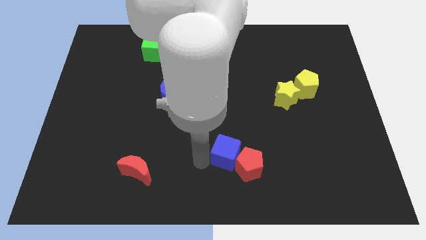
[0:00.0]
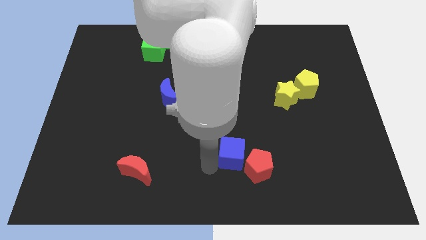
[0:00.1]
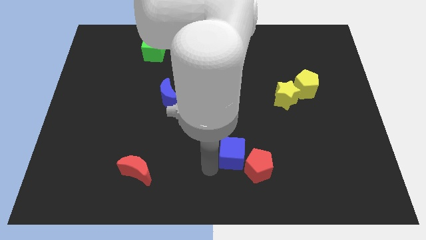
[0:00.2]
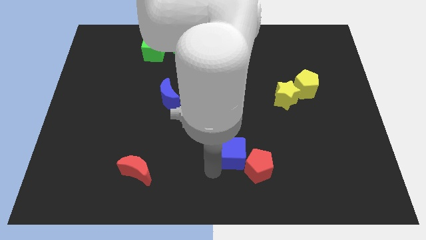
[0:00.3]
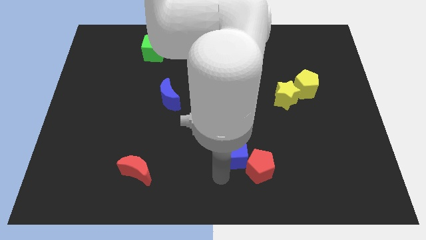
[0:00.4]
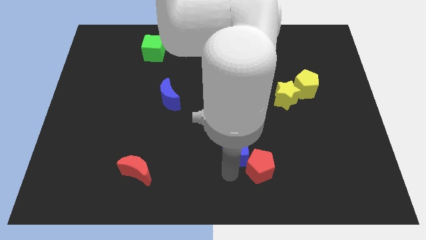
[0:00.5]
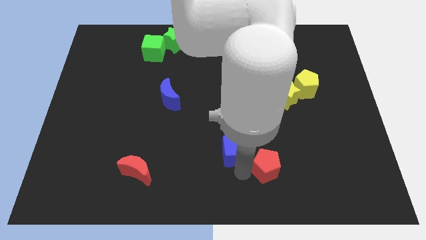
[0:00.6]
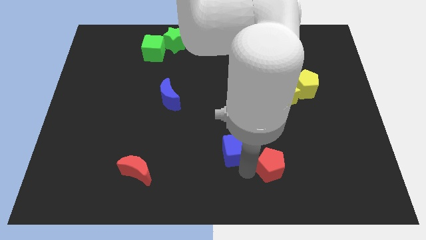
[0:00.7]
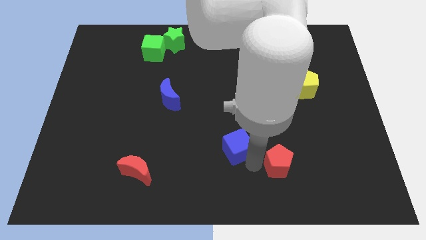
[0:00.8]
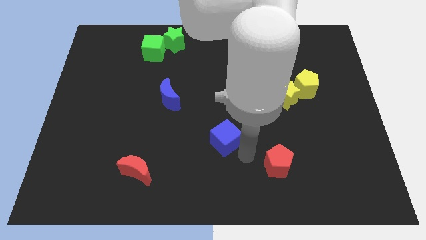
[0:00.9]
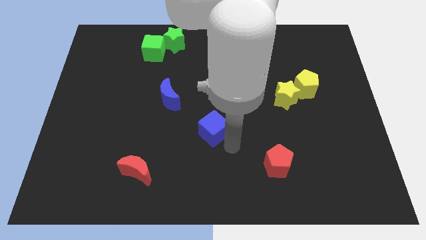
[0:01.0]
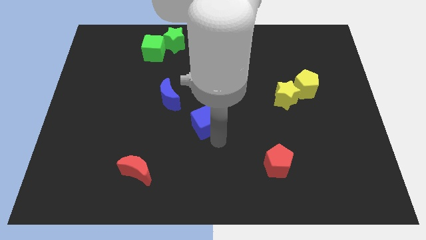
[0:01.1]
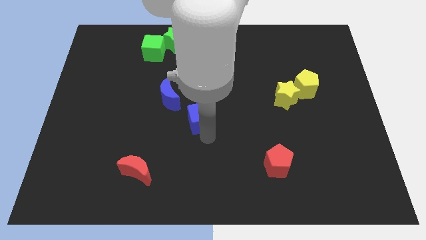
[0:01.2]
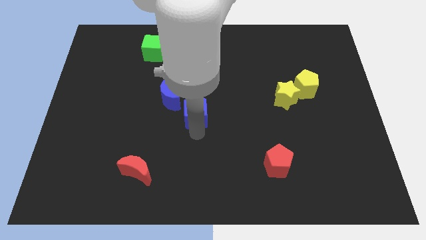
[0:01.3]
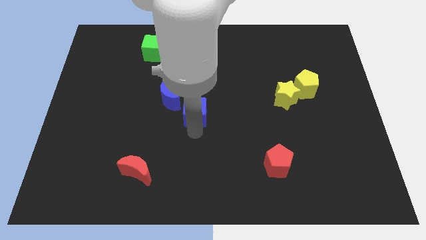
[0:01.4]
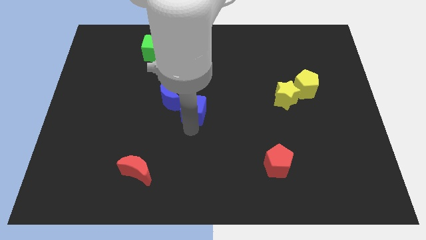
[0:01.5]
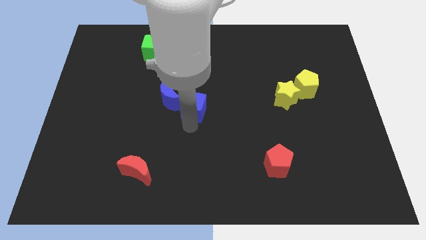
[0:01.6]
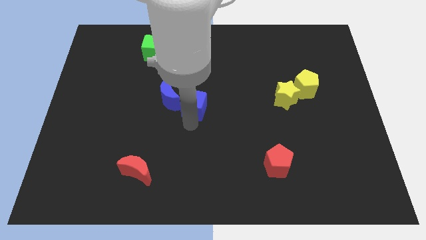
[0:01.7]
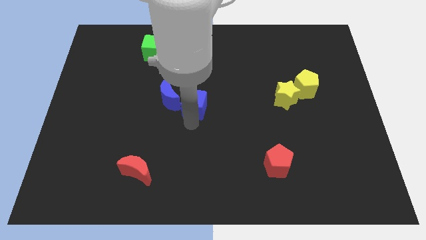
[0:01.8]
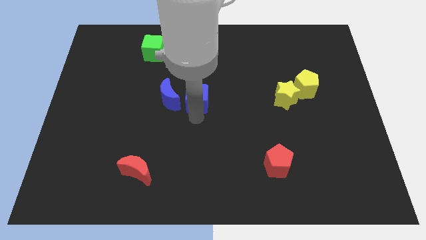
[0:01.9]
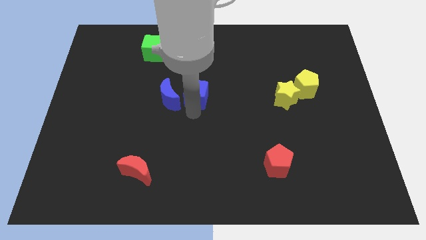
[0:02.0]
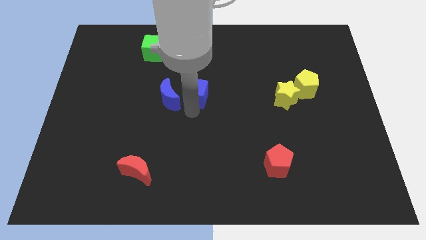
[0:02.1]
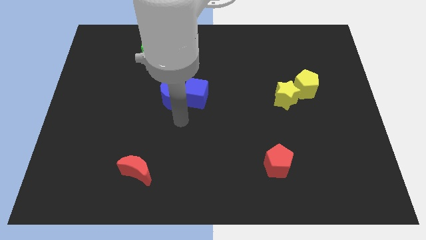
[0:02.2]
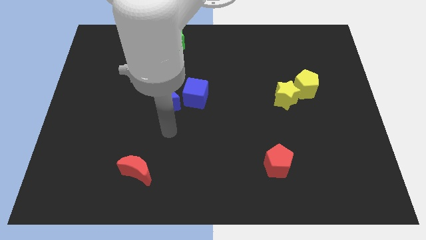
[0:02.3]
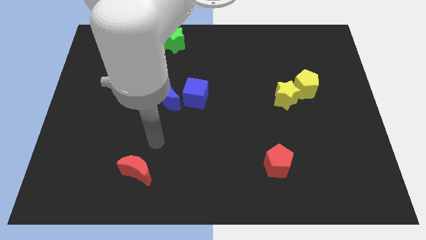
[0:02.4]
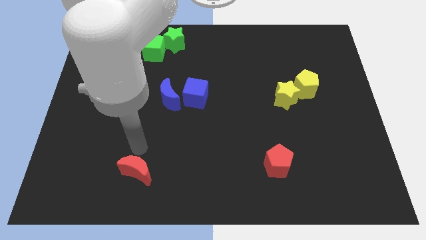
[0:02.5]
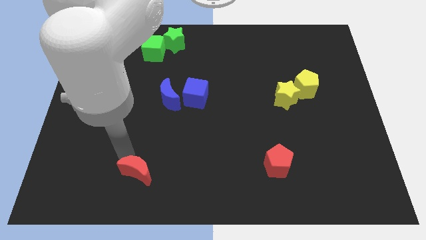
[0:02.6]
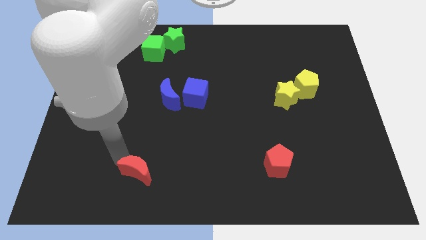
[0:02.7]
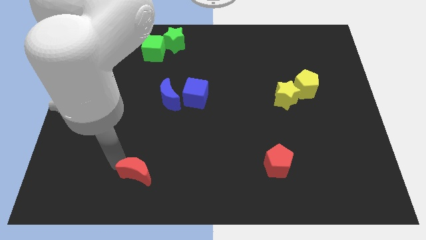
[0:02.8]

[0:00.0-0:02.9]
move the blue cube to the right of the blue crescent

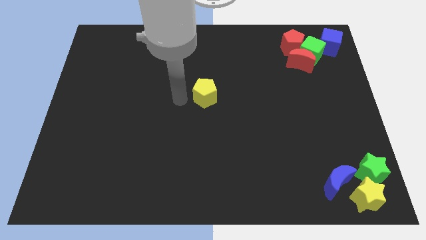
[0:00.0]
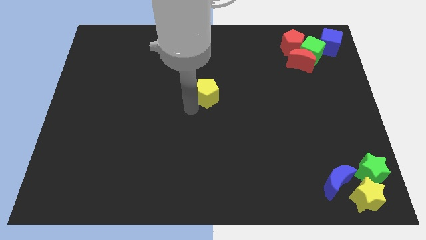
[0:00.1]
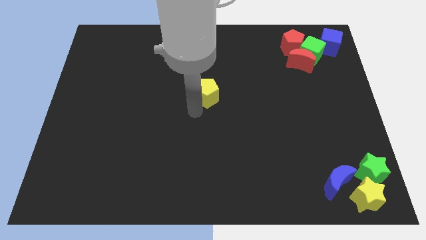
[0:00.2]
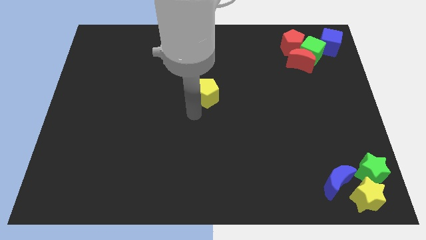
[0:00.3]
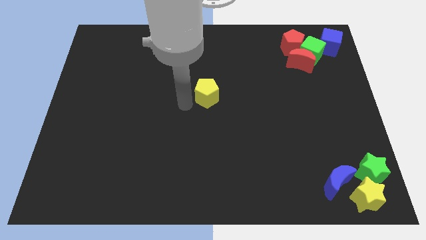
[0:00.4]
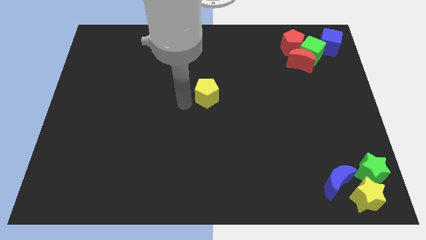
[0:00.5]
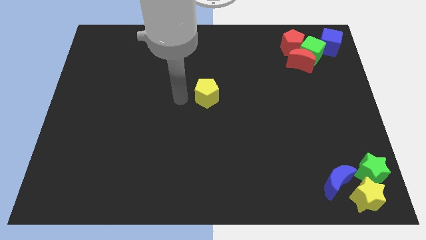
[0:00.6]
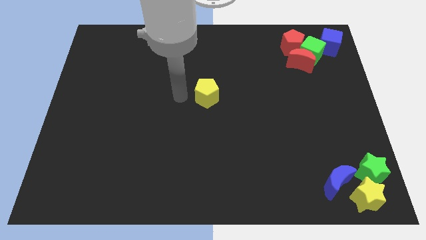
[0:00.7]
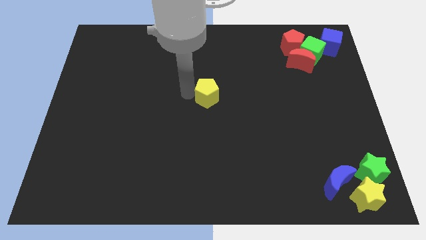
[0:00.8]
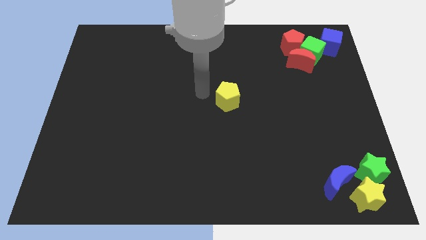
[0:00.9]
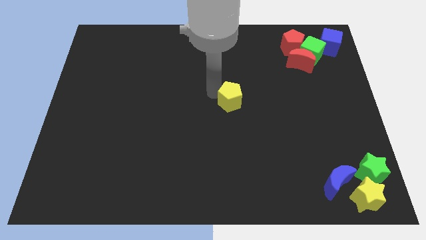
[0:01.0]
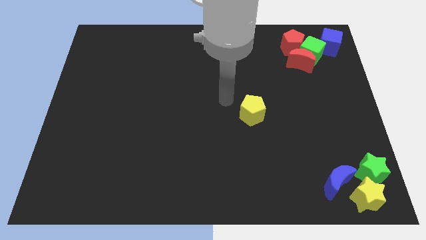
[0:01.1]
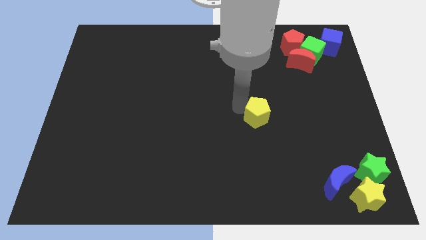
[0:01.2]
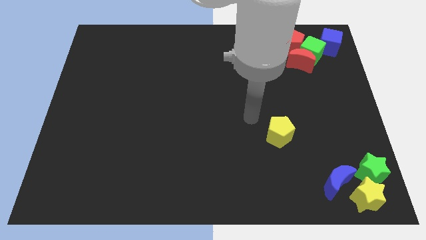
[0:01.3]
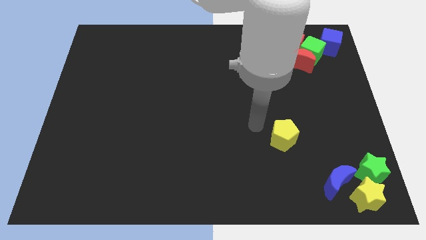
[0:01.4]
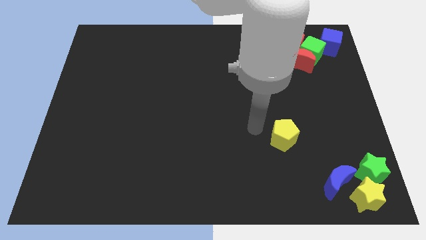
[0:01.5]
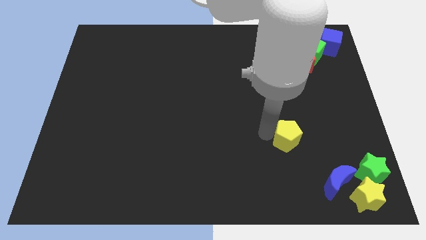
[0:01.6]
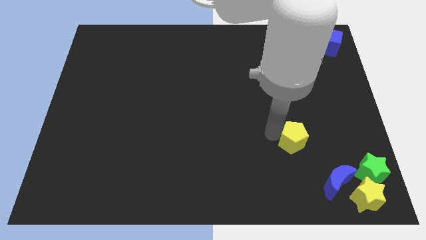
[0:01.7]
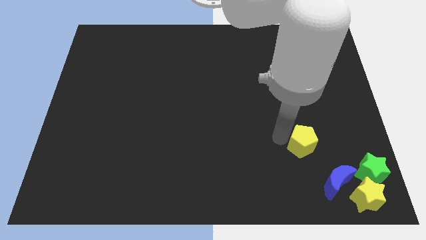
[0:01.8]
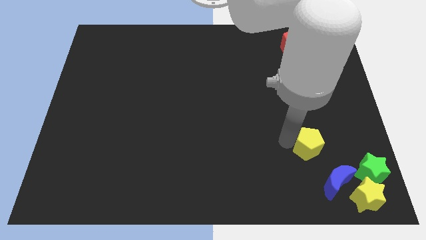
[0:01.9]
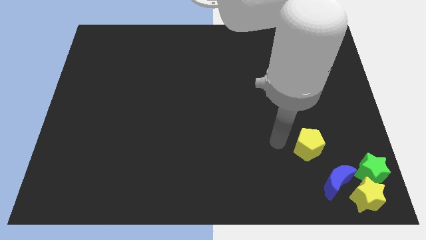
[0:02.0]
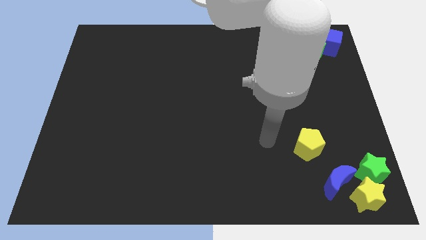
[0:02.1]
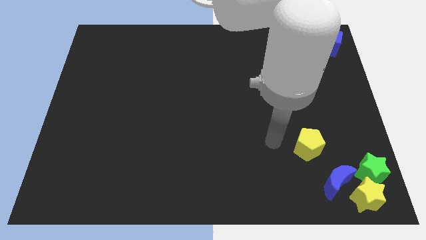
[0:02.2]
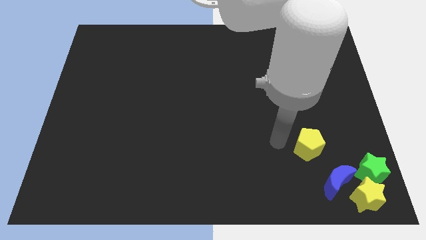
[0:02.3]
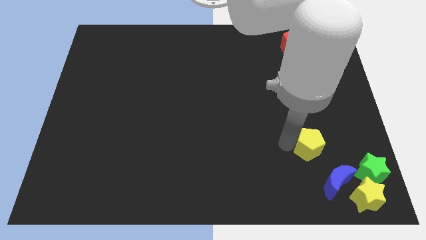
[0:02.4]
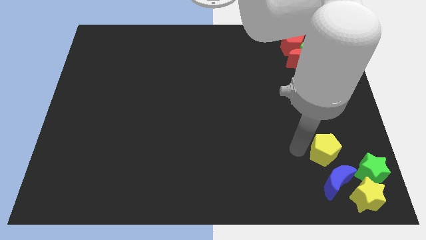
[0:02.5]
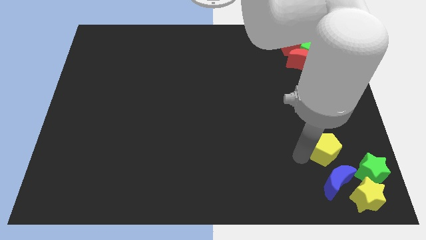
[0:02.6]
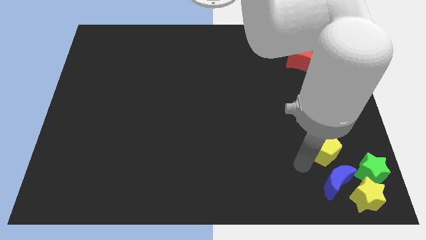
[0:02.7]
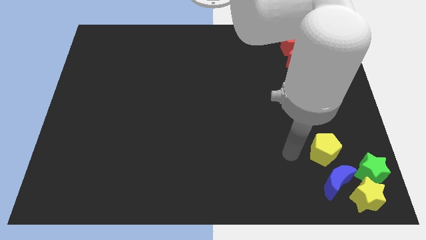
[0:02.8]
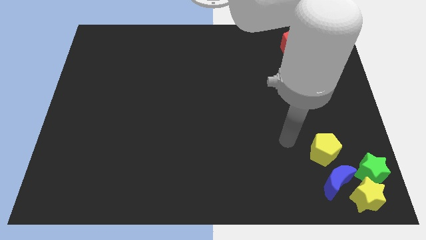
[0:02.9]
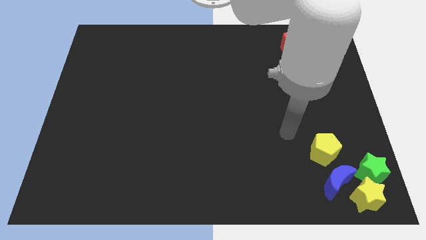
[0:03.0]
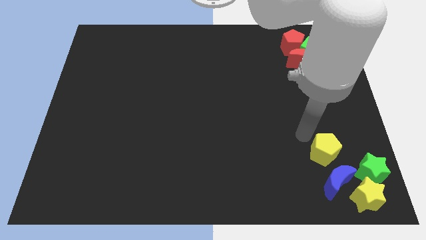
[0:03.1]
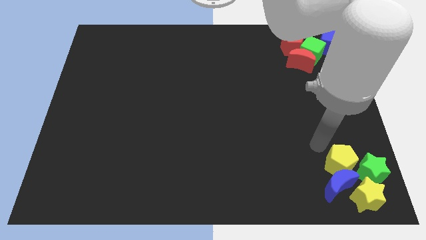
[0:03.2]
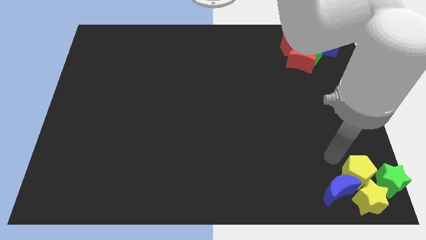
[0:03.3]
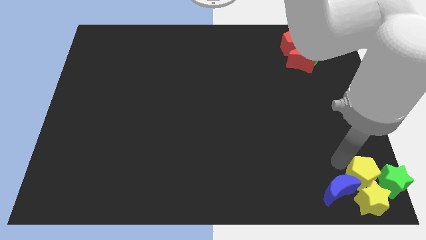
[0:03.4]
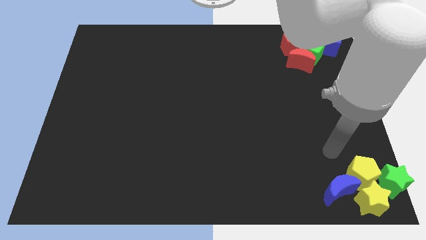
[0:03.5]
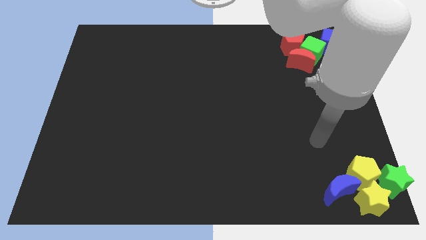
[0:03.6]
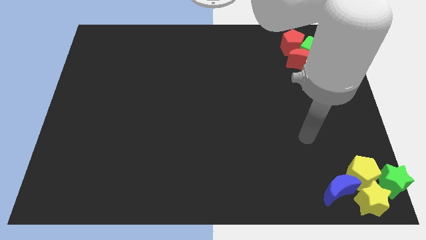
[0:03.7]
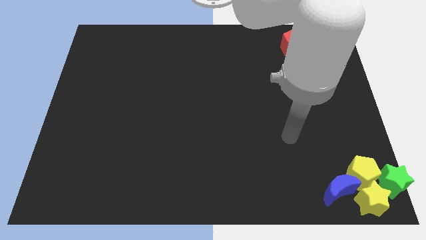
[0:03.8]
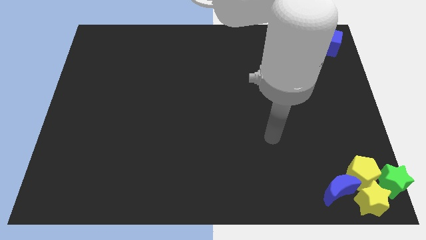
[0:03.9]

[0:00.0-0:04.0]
push the yellow pentagon into the group of blocks at the bottom right of the board

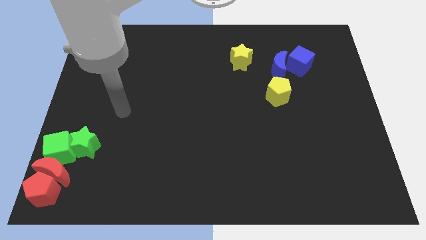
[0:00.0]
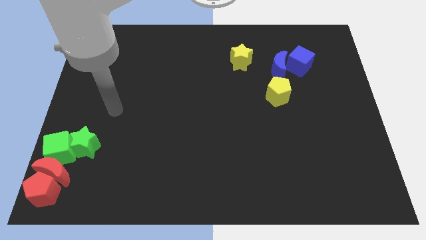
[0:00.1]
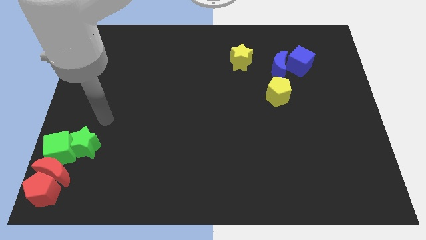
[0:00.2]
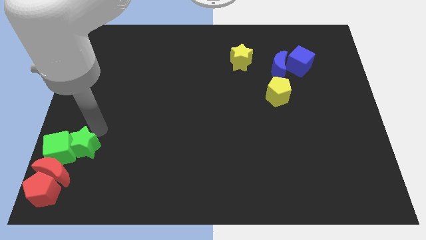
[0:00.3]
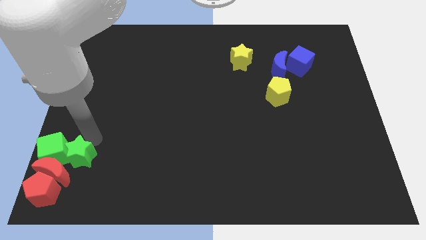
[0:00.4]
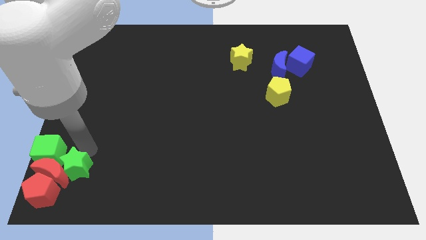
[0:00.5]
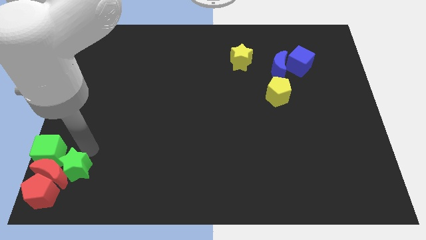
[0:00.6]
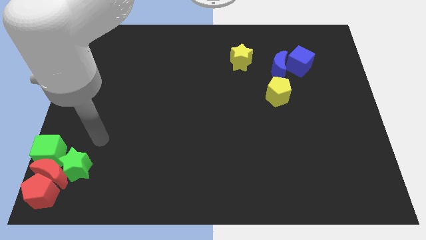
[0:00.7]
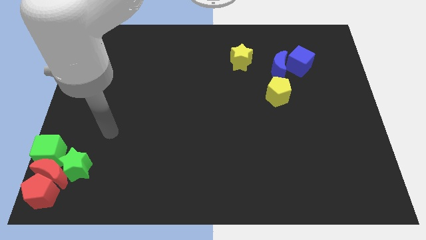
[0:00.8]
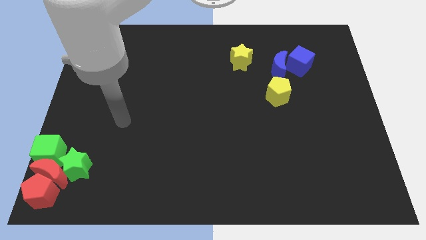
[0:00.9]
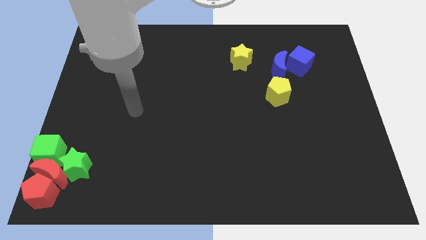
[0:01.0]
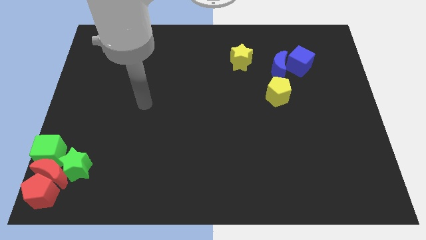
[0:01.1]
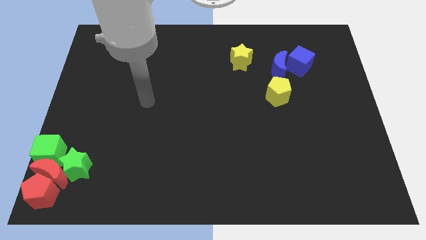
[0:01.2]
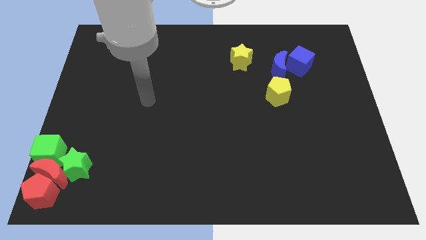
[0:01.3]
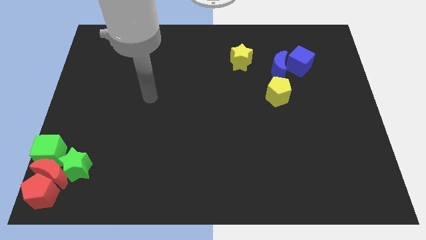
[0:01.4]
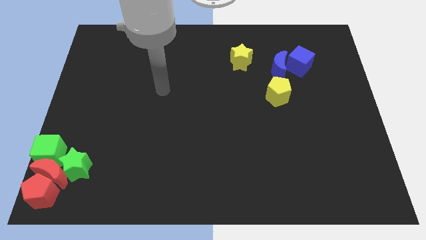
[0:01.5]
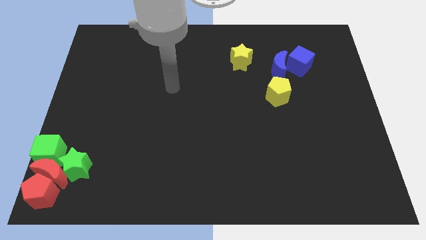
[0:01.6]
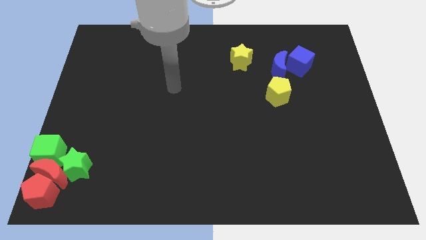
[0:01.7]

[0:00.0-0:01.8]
move the green star slightly downwards

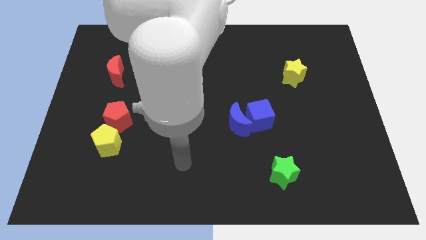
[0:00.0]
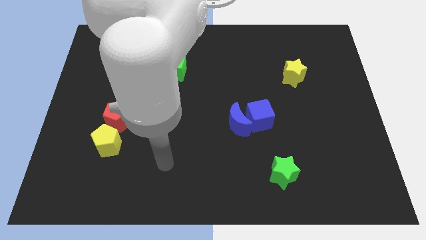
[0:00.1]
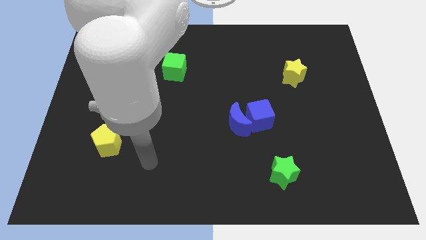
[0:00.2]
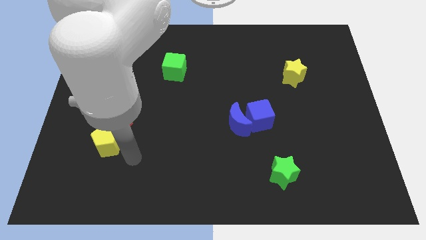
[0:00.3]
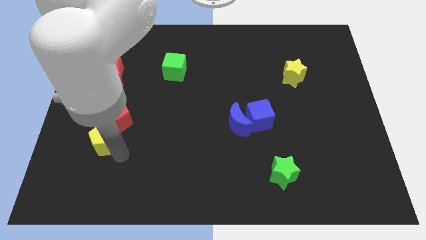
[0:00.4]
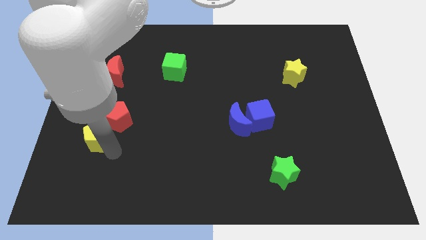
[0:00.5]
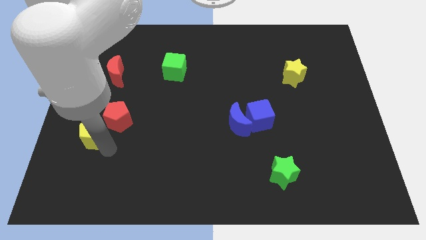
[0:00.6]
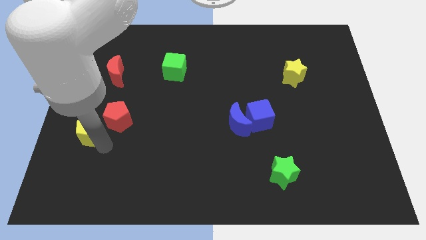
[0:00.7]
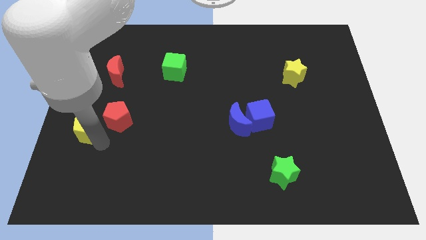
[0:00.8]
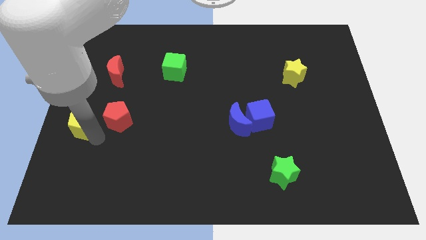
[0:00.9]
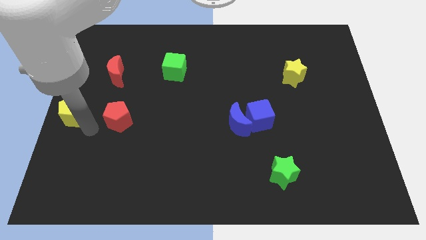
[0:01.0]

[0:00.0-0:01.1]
move yellow pentagon to the center left
